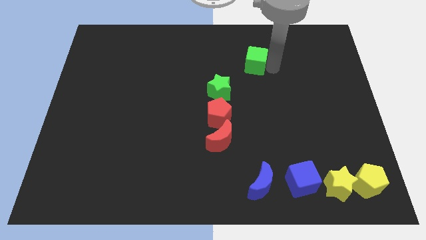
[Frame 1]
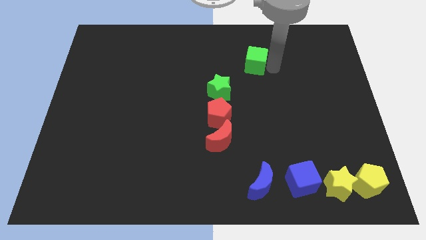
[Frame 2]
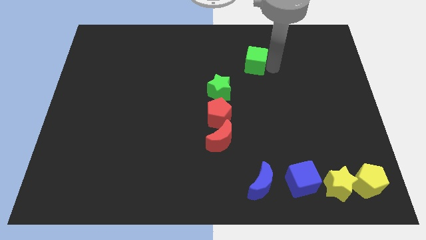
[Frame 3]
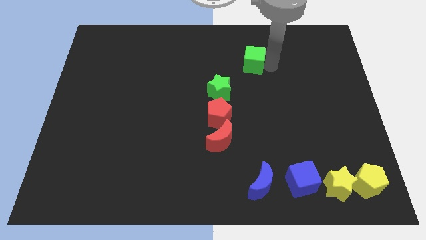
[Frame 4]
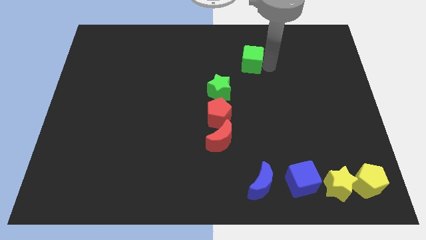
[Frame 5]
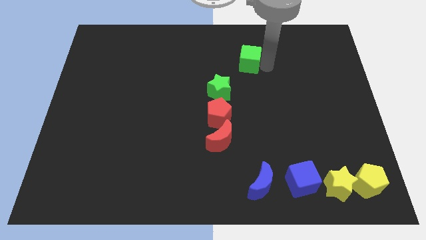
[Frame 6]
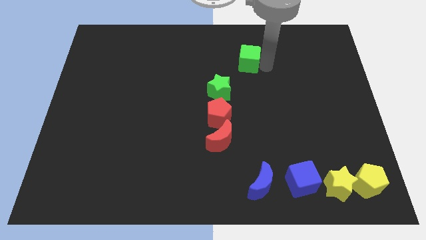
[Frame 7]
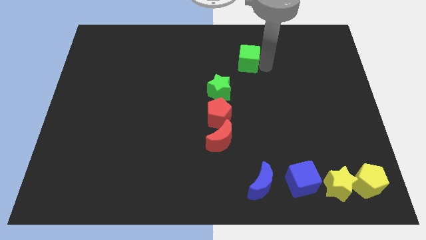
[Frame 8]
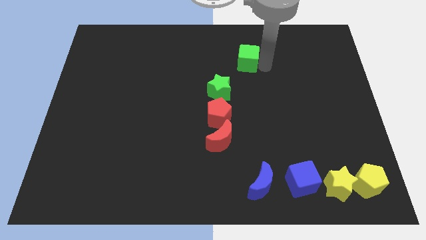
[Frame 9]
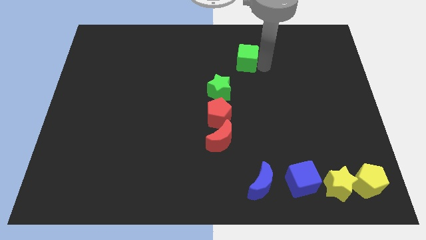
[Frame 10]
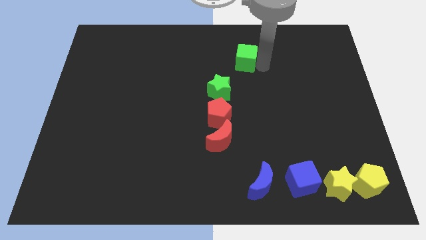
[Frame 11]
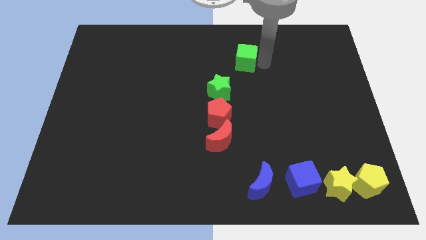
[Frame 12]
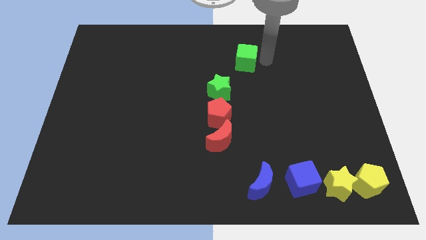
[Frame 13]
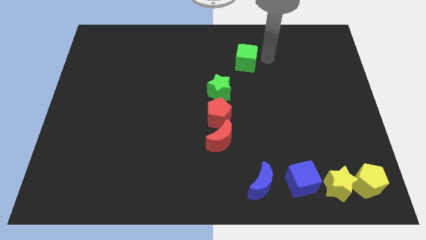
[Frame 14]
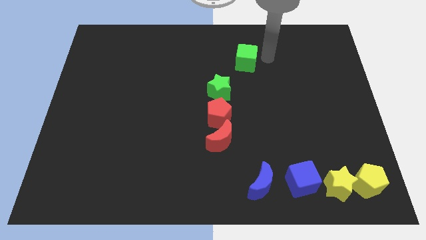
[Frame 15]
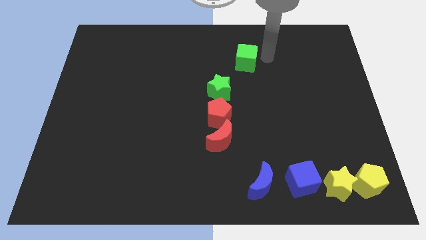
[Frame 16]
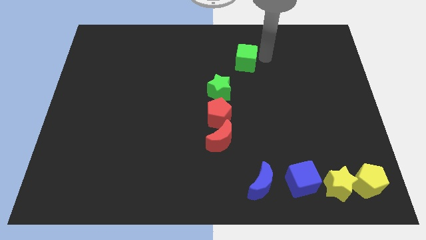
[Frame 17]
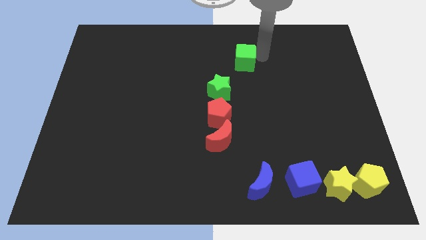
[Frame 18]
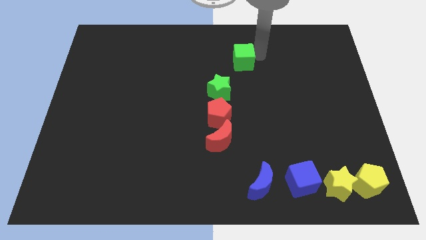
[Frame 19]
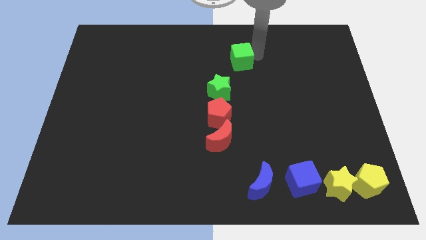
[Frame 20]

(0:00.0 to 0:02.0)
slightly push the green cube to the left

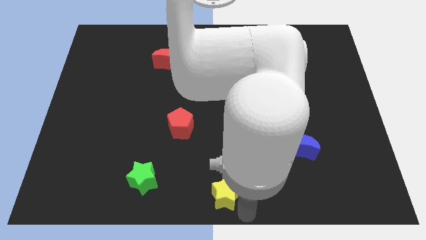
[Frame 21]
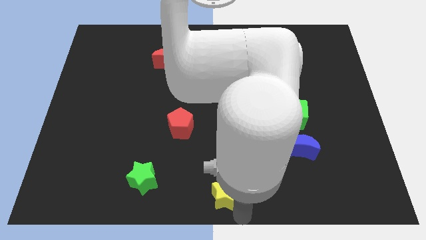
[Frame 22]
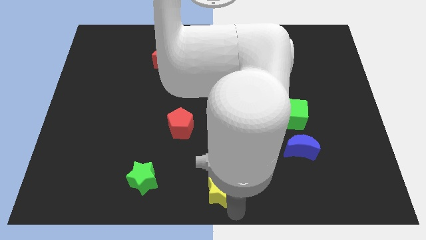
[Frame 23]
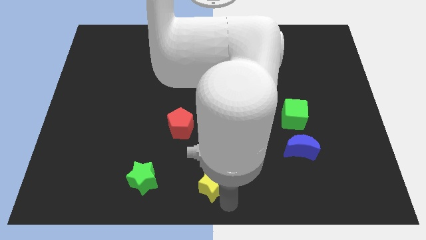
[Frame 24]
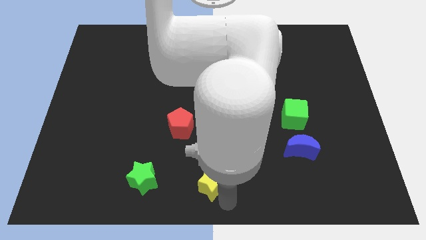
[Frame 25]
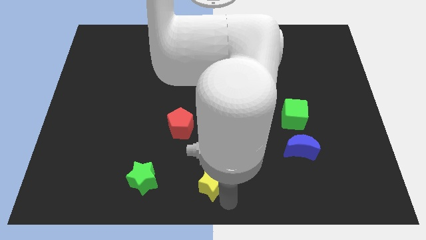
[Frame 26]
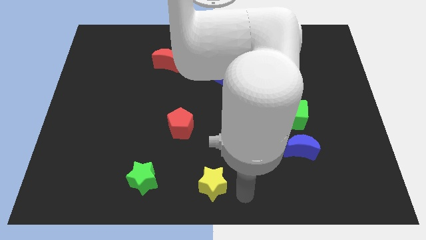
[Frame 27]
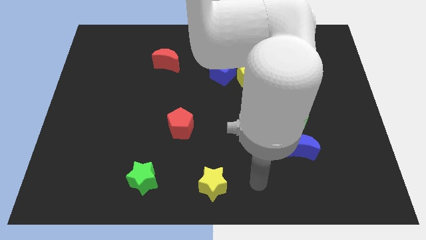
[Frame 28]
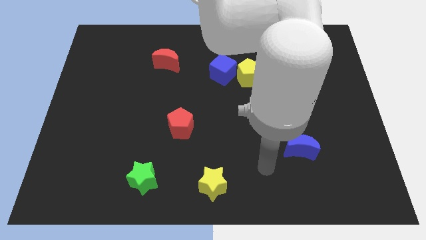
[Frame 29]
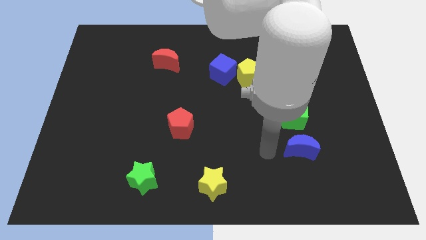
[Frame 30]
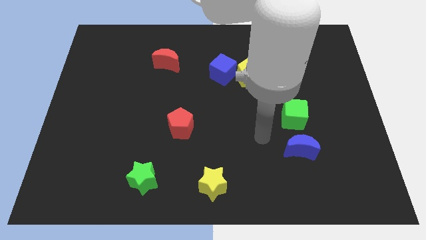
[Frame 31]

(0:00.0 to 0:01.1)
move the yellow star right to the green star

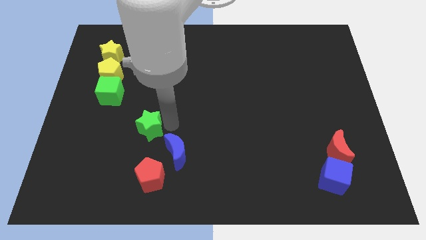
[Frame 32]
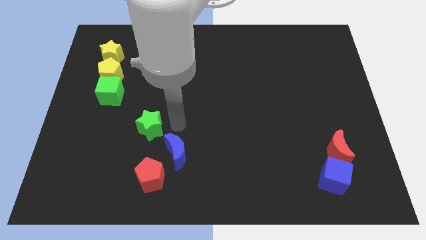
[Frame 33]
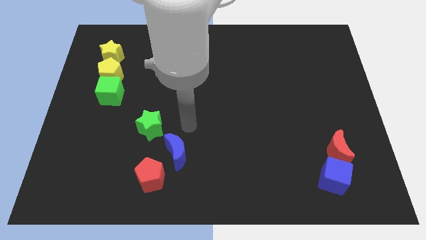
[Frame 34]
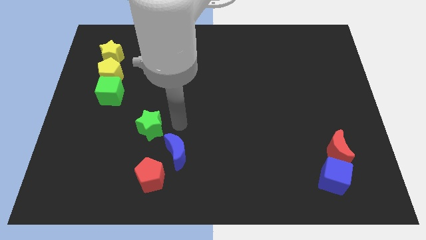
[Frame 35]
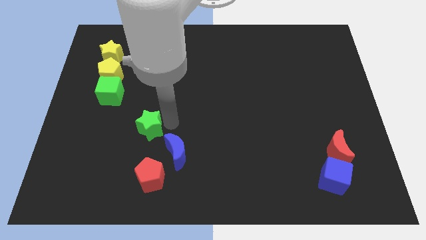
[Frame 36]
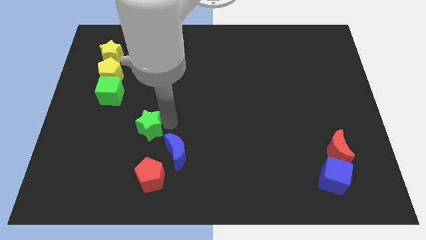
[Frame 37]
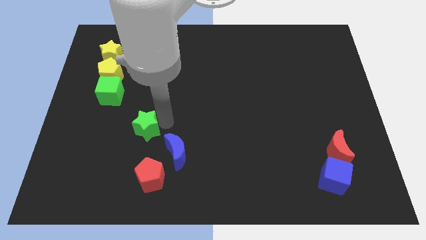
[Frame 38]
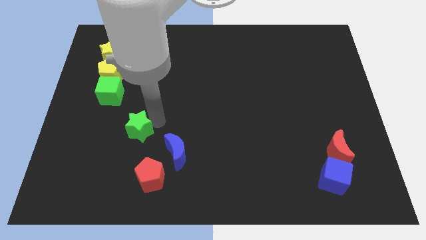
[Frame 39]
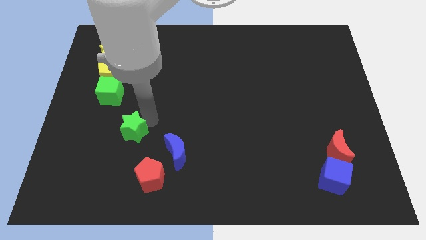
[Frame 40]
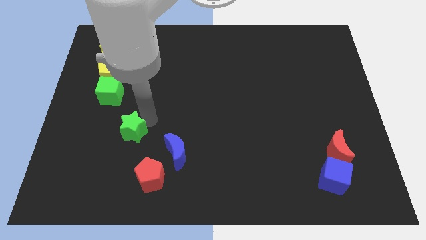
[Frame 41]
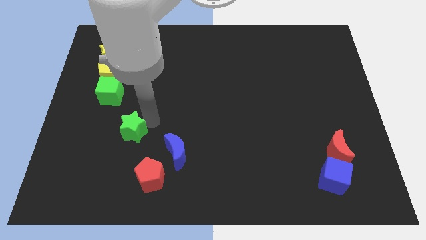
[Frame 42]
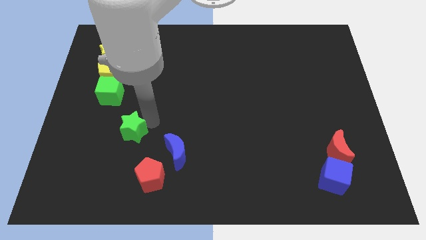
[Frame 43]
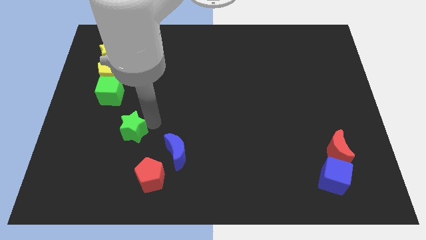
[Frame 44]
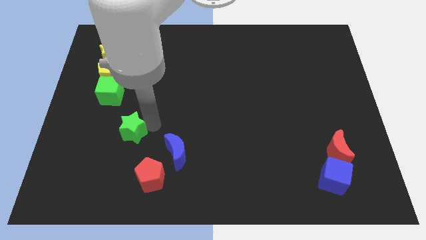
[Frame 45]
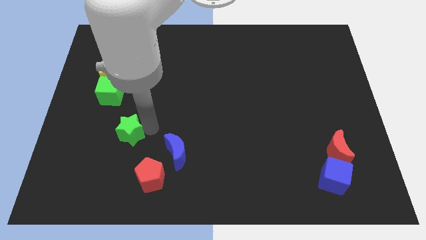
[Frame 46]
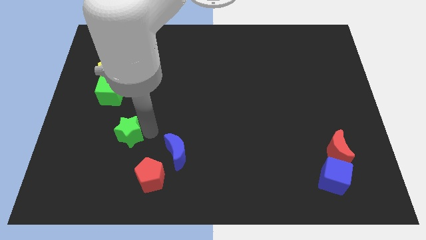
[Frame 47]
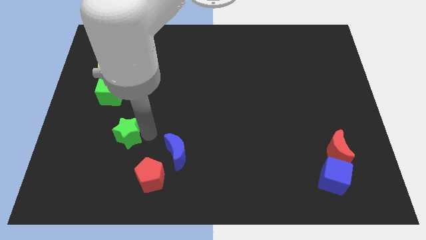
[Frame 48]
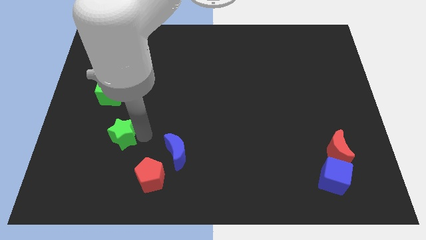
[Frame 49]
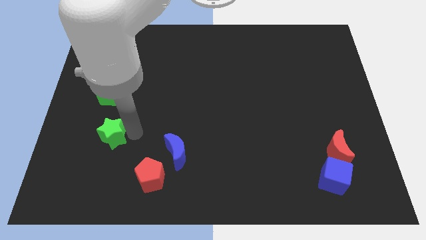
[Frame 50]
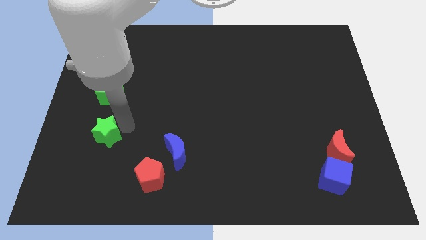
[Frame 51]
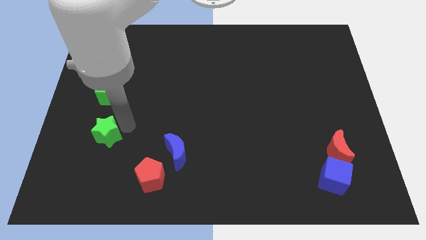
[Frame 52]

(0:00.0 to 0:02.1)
place the green star below the green cube

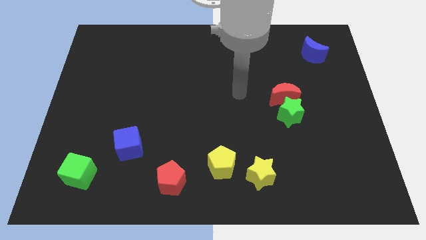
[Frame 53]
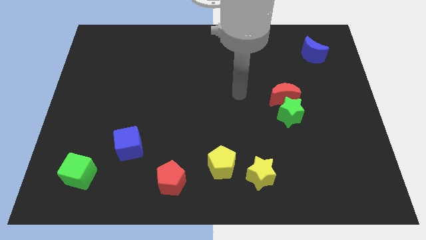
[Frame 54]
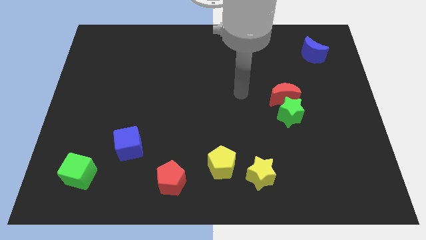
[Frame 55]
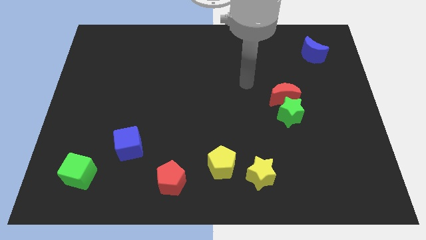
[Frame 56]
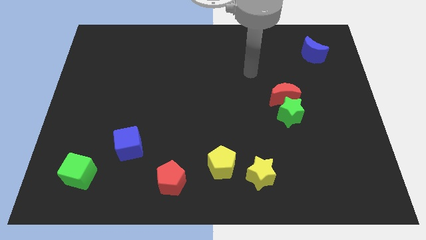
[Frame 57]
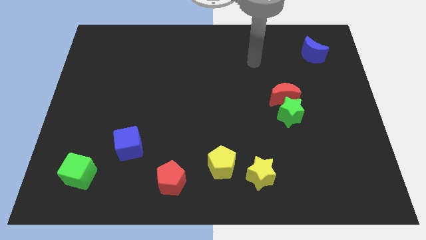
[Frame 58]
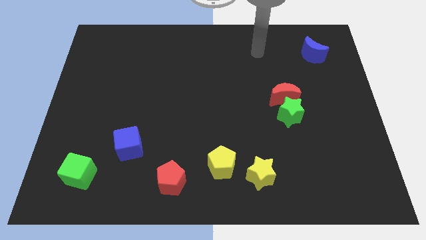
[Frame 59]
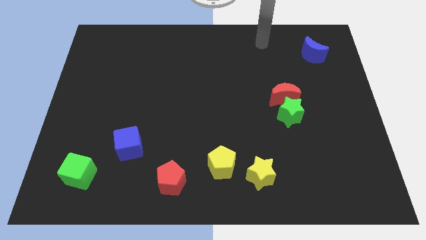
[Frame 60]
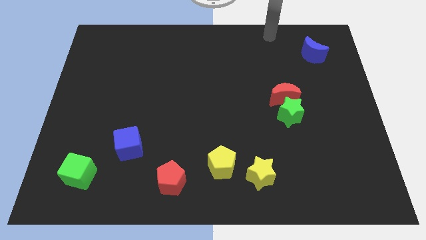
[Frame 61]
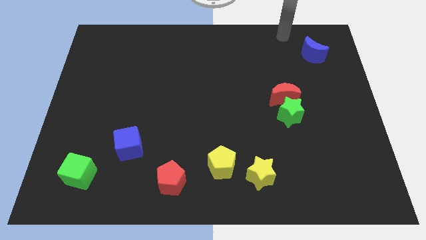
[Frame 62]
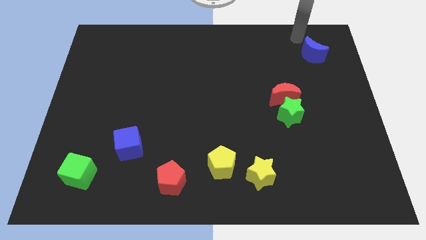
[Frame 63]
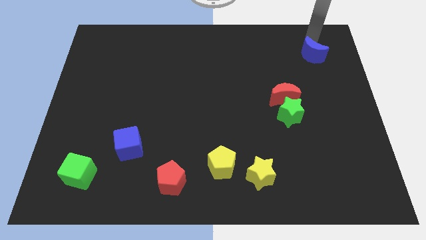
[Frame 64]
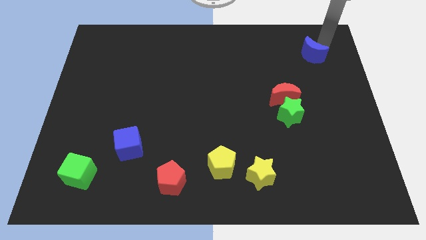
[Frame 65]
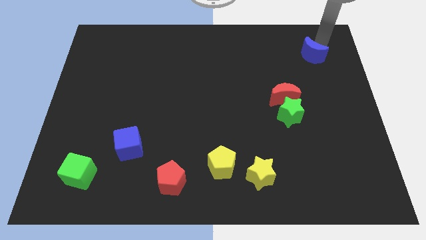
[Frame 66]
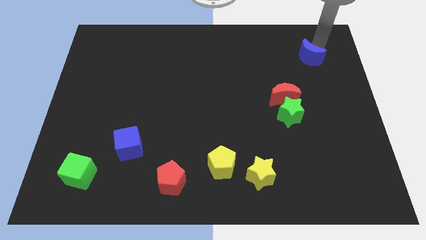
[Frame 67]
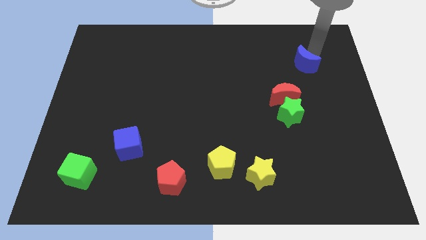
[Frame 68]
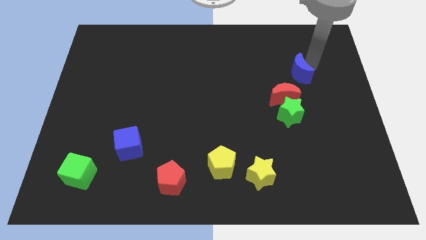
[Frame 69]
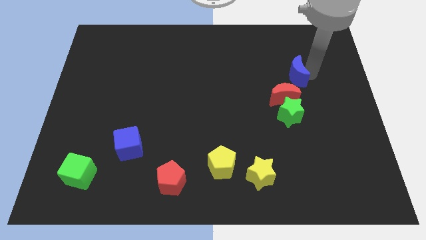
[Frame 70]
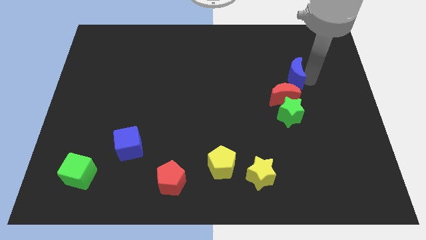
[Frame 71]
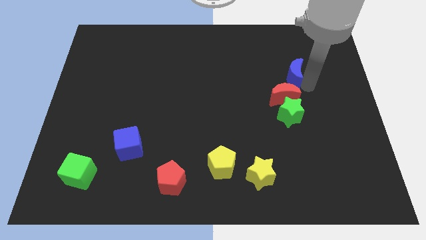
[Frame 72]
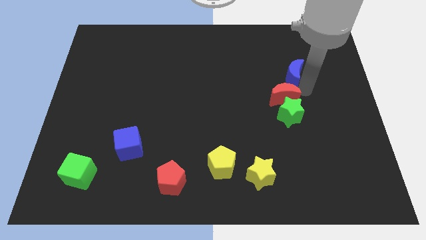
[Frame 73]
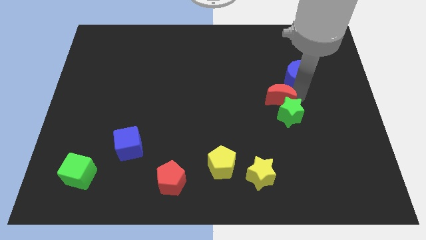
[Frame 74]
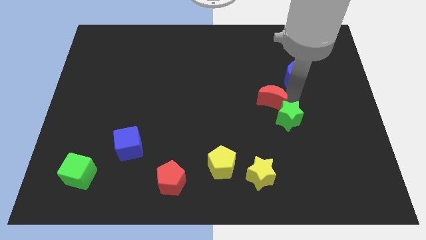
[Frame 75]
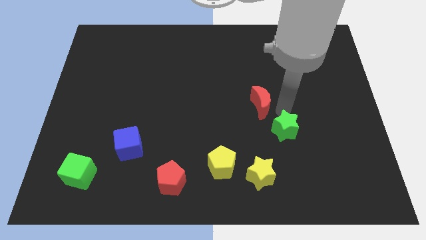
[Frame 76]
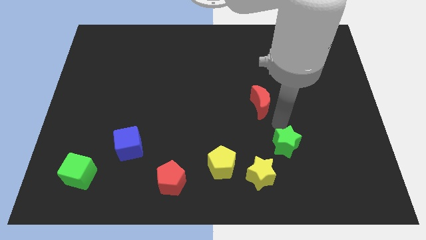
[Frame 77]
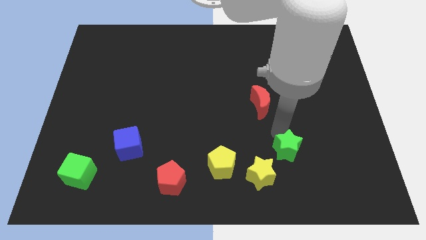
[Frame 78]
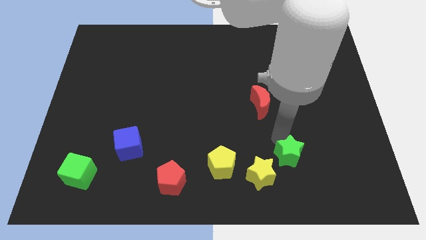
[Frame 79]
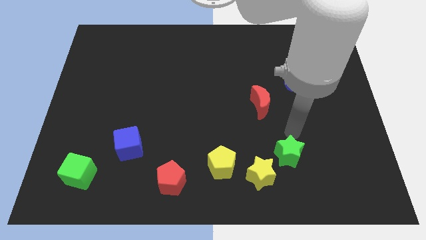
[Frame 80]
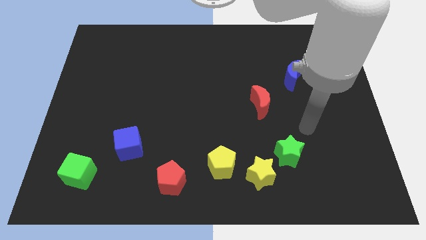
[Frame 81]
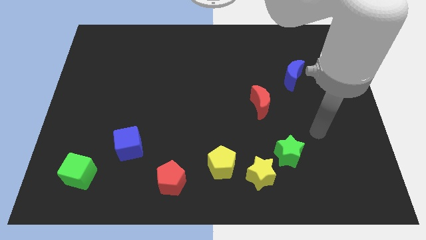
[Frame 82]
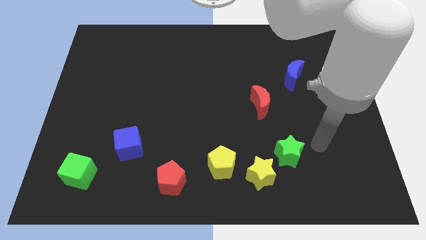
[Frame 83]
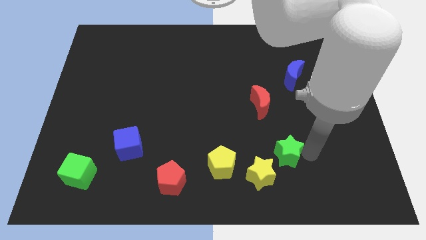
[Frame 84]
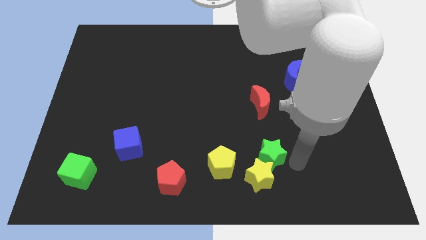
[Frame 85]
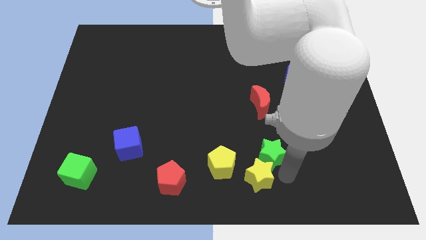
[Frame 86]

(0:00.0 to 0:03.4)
move the blue crescent and green star diagonally on the top right side of the yellow star

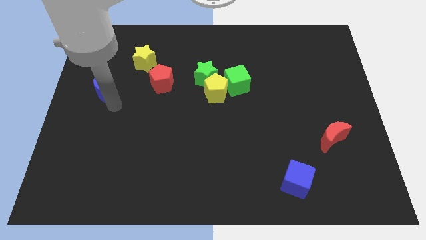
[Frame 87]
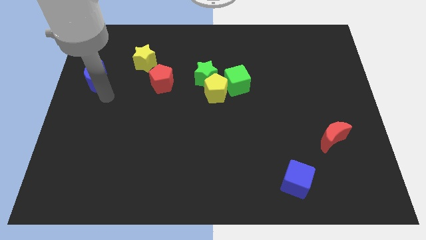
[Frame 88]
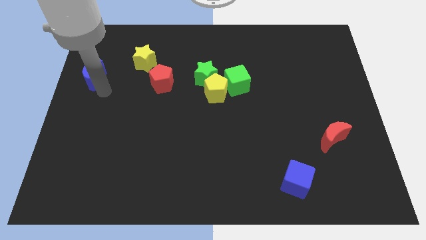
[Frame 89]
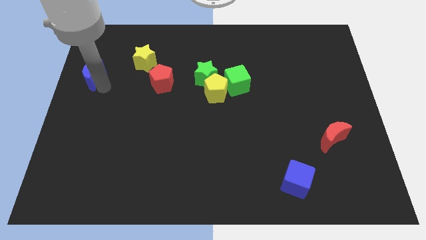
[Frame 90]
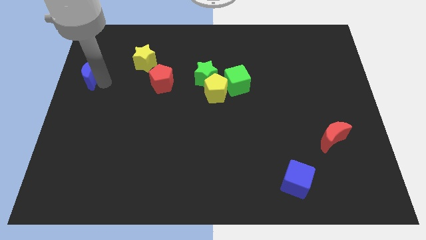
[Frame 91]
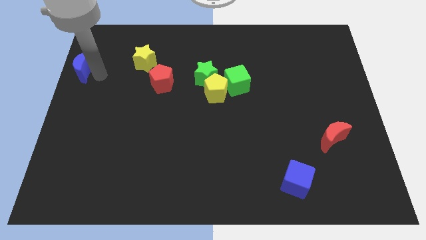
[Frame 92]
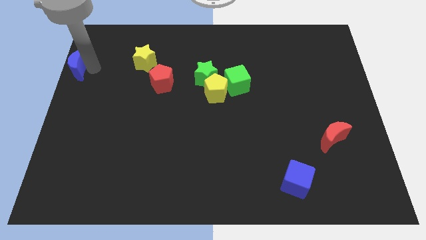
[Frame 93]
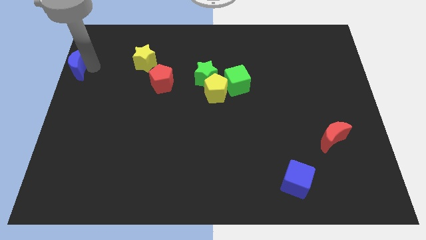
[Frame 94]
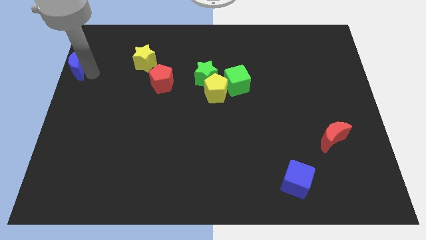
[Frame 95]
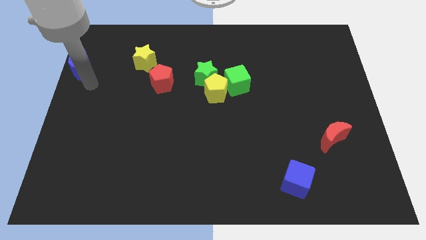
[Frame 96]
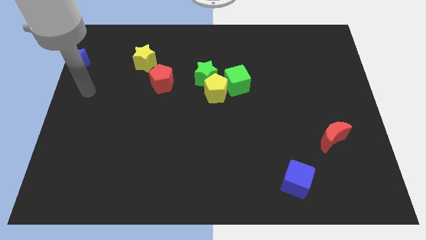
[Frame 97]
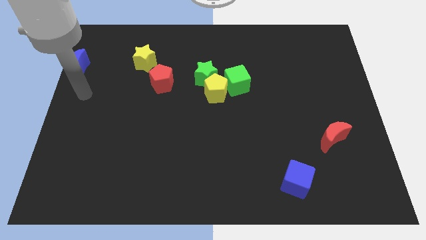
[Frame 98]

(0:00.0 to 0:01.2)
place the blue moon parallel left to the yellow star
